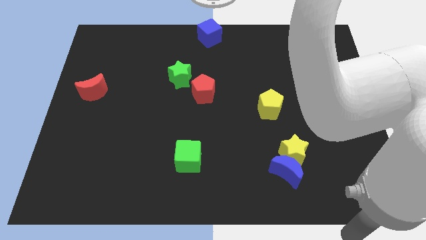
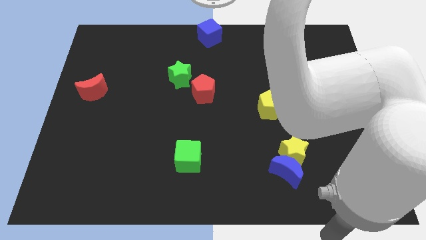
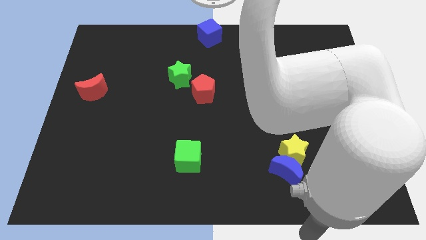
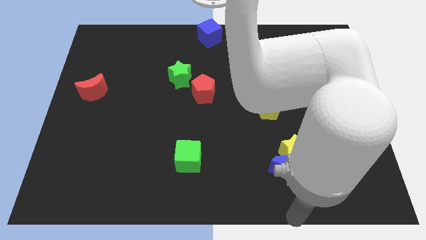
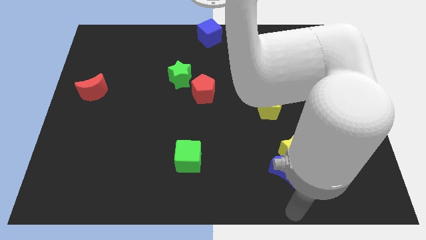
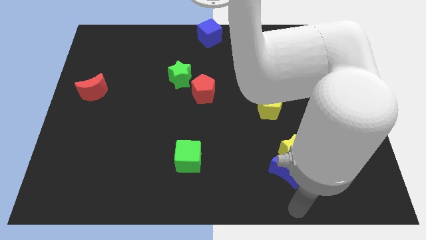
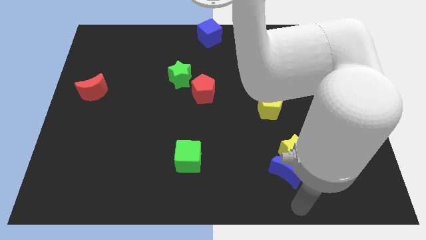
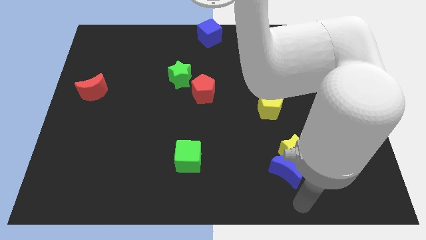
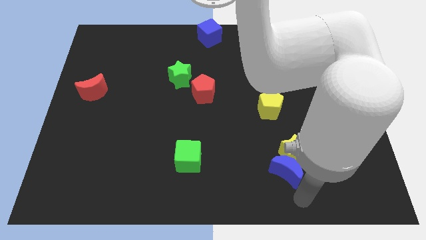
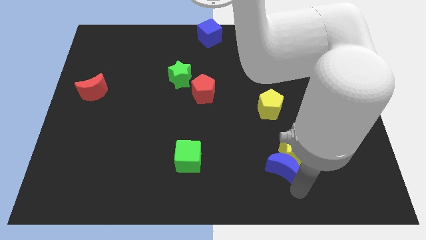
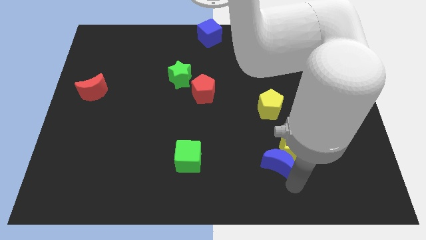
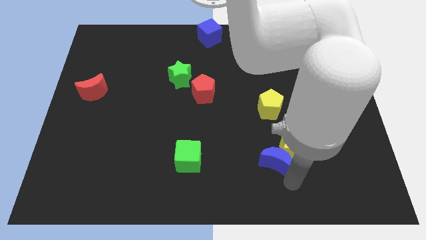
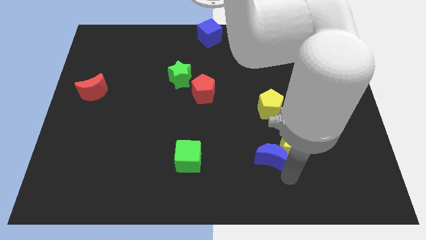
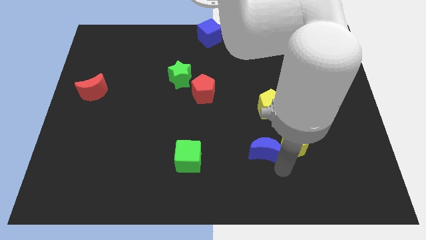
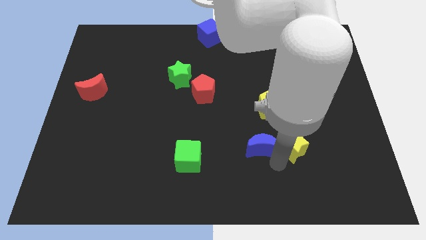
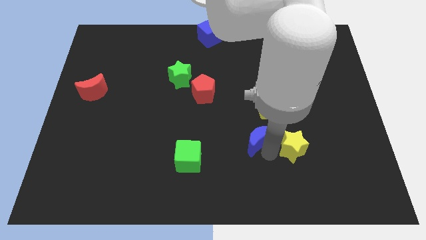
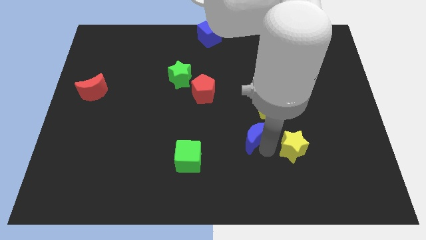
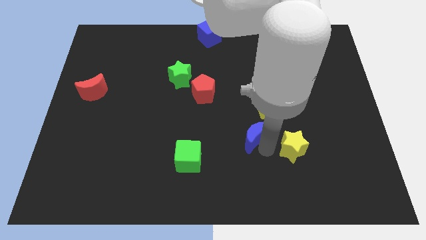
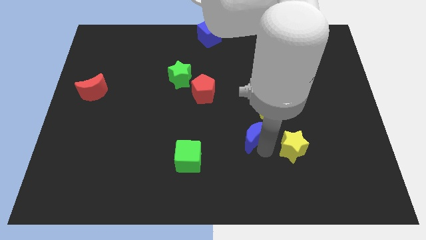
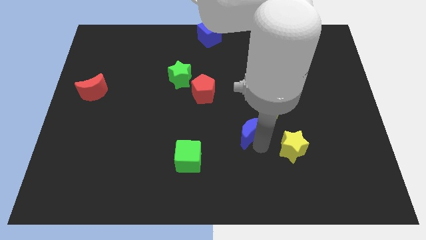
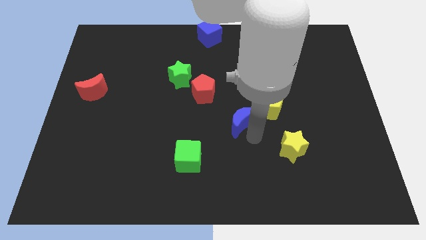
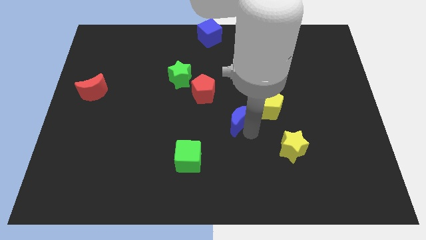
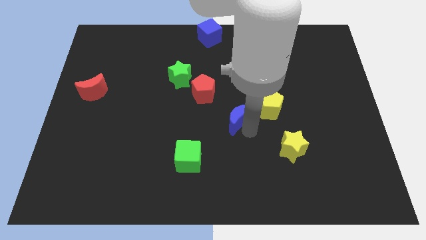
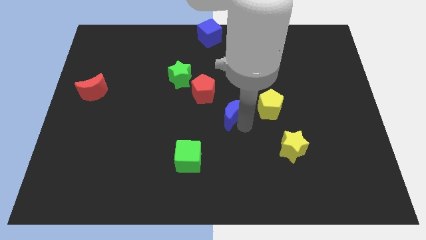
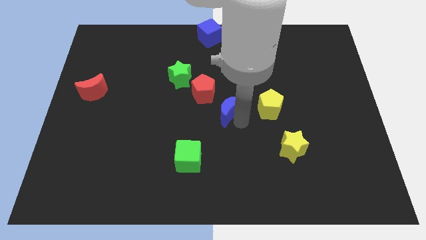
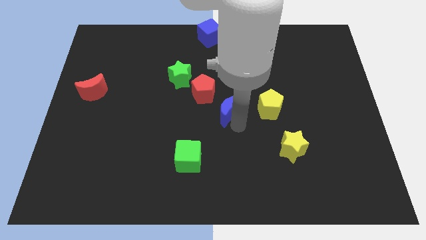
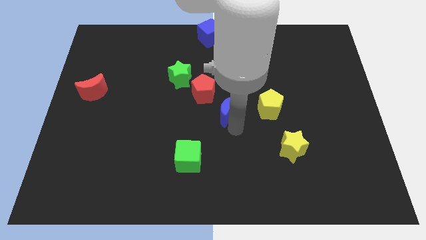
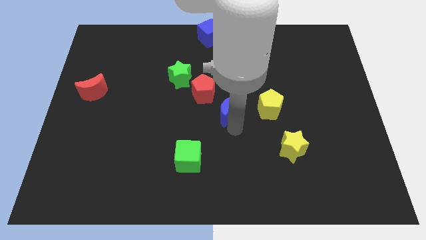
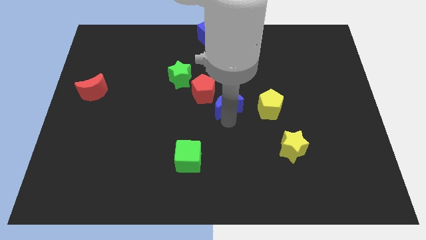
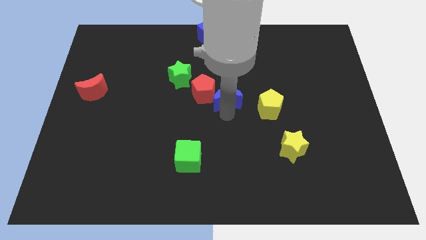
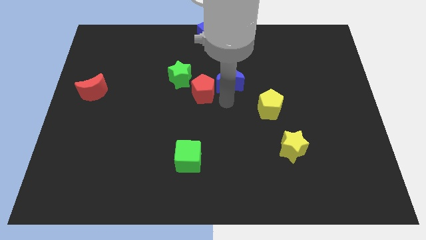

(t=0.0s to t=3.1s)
move the blue crescent to the right of the red pentagon

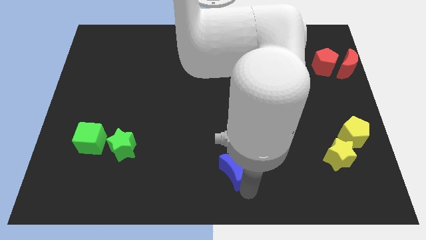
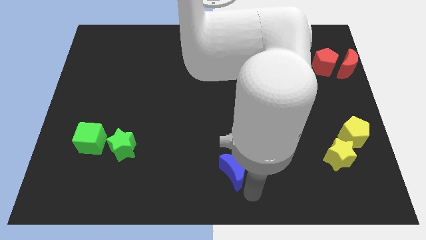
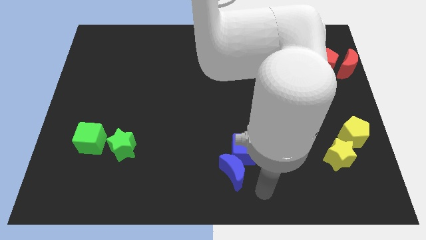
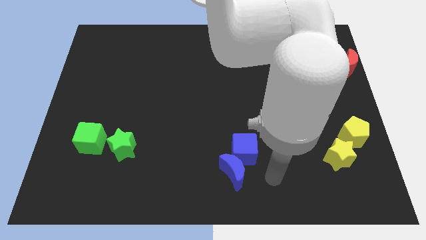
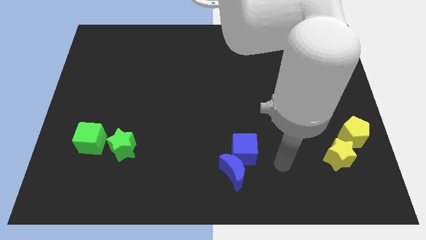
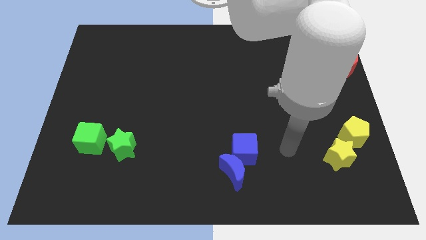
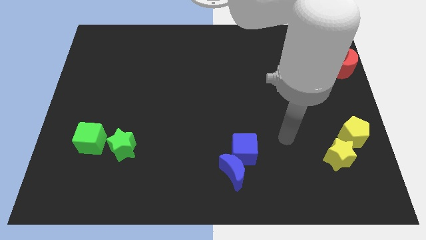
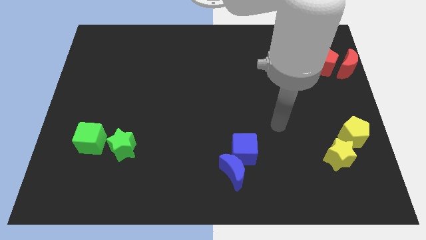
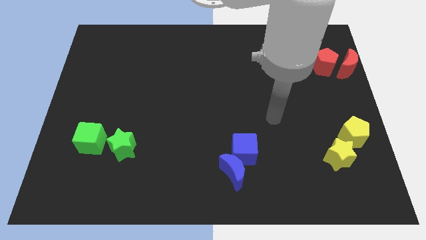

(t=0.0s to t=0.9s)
move the arm away from the blue moon

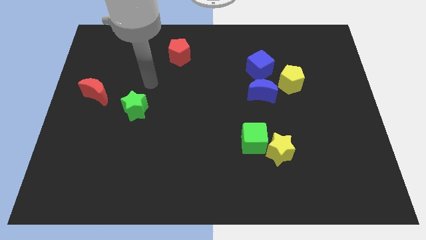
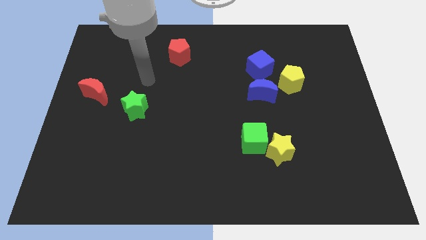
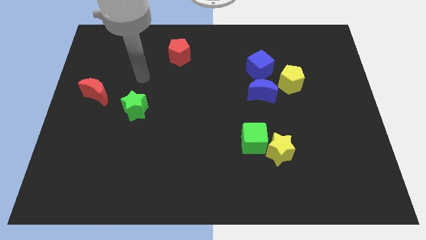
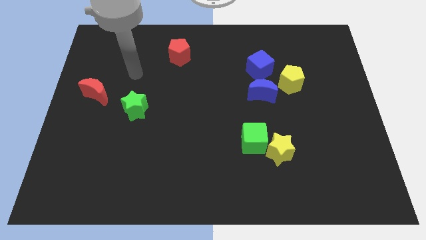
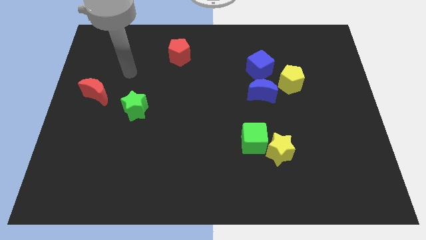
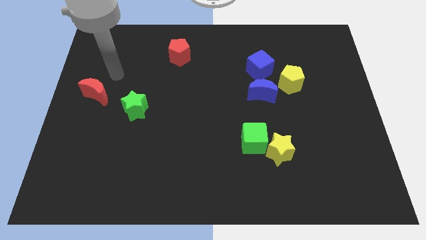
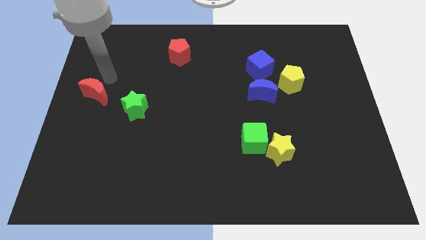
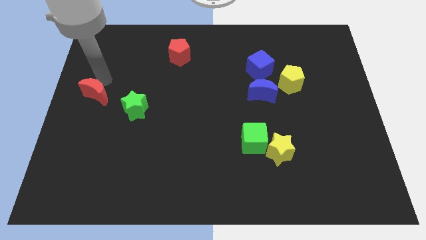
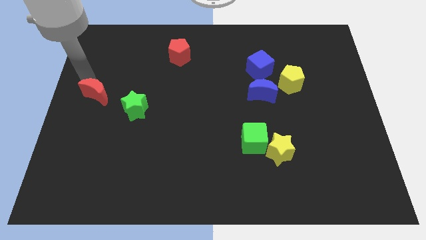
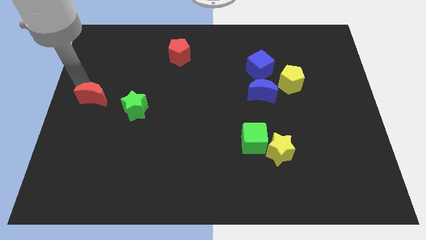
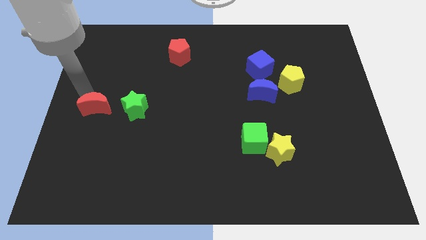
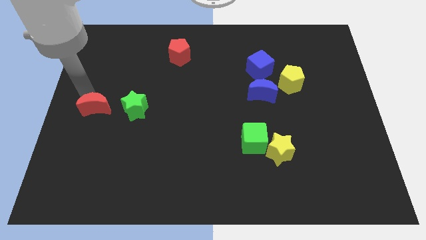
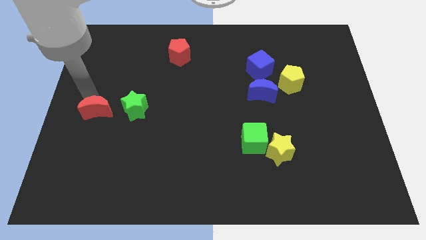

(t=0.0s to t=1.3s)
place the red crescent to the left of the green star

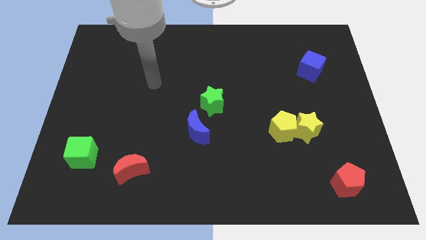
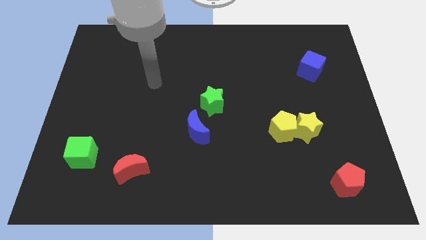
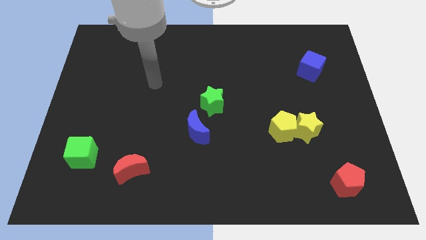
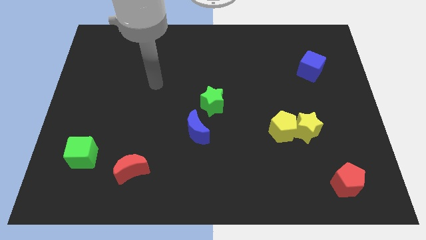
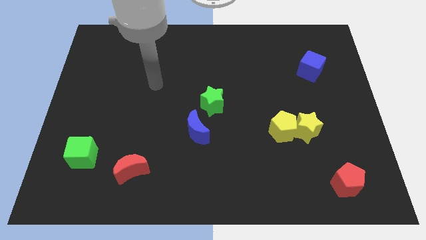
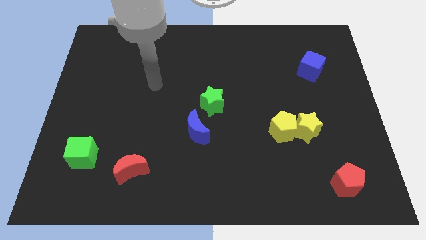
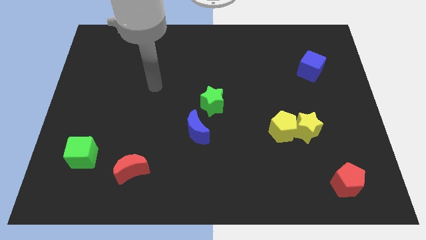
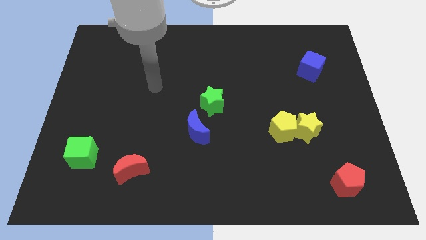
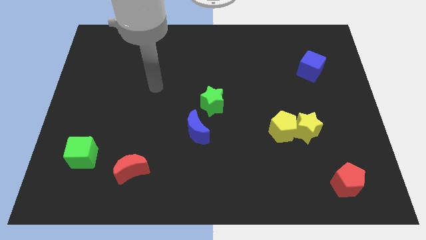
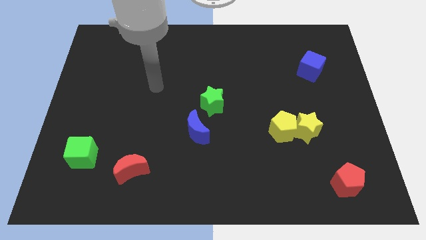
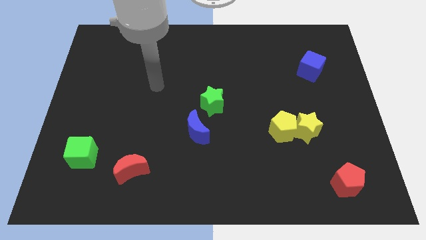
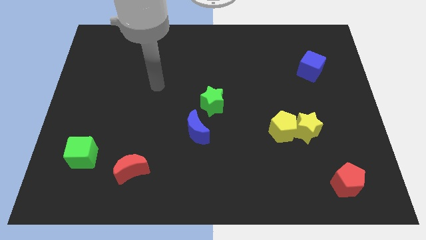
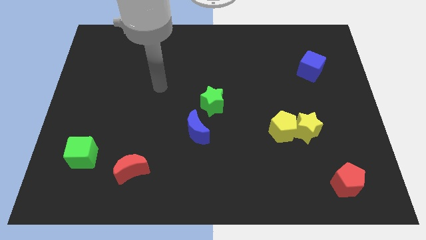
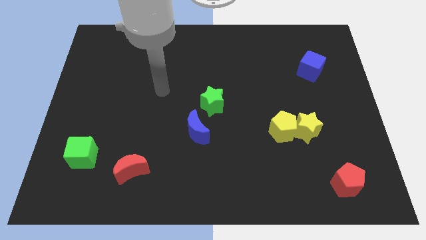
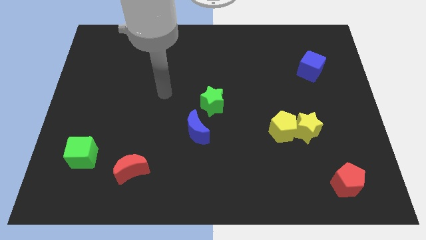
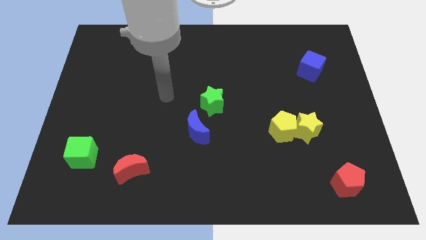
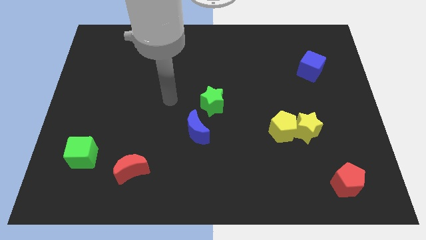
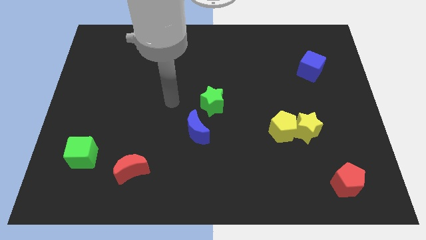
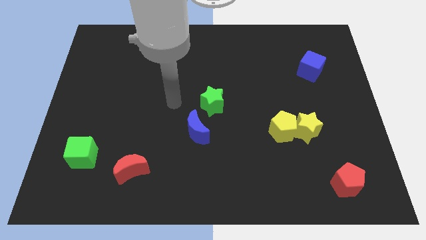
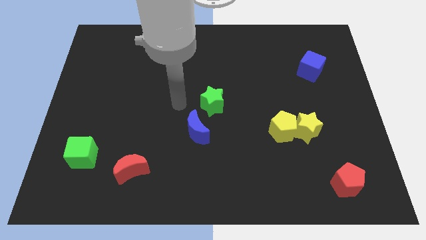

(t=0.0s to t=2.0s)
move your arm diagonal to the blue moon

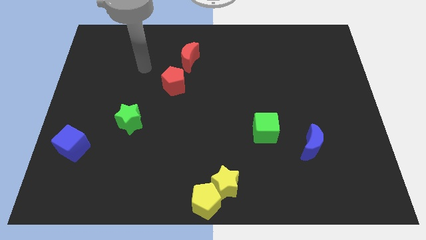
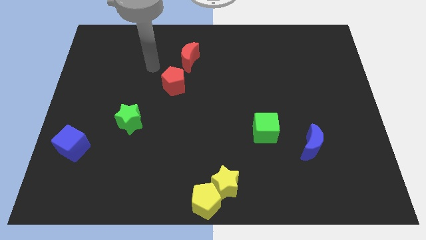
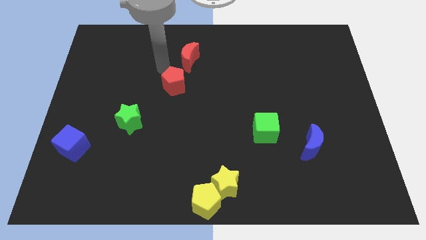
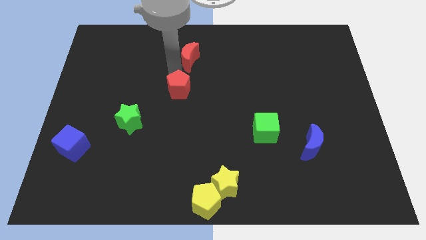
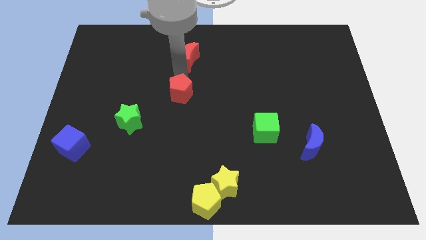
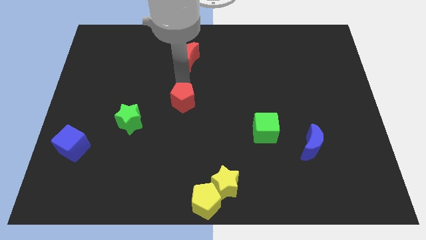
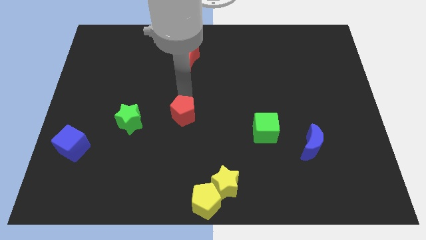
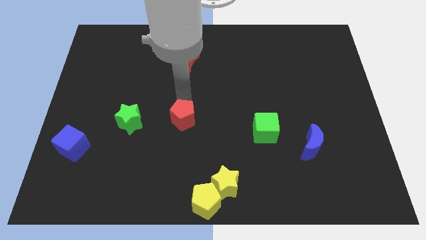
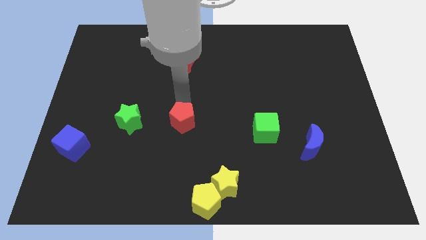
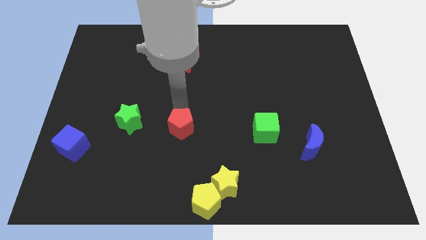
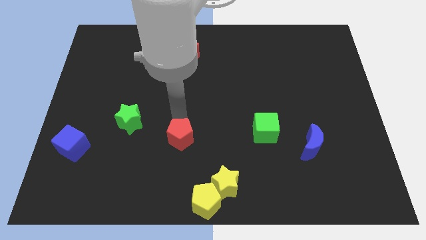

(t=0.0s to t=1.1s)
move red pentagon from red crescent

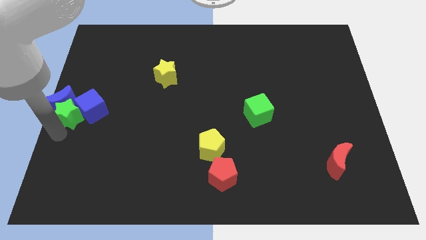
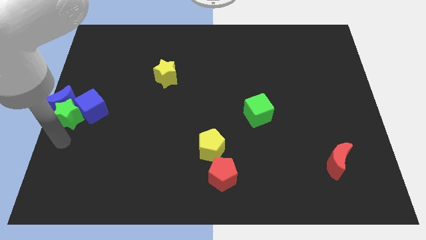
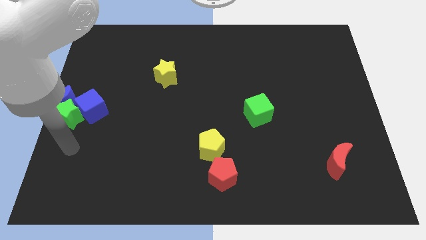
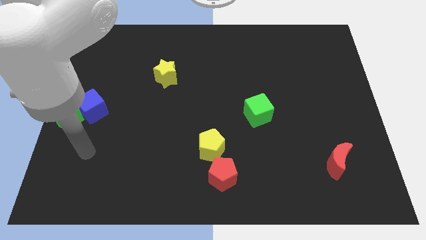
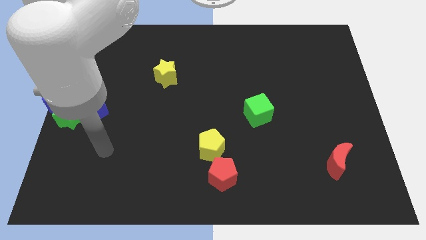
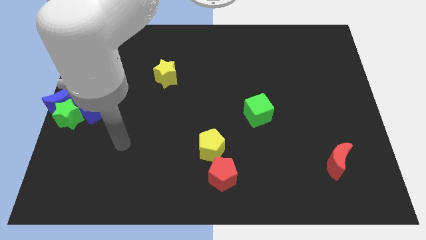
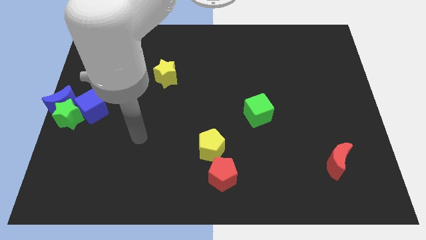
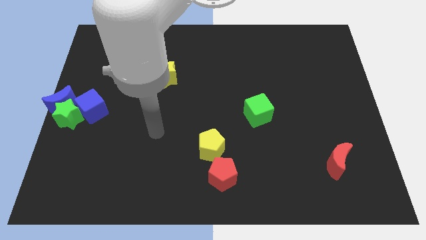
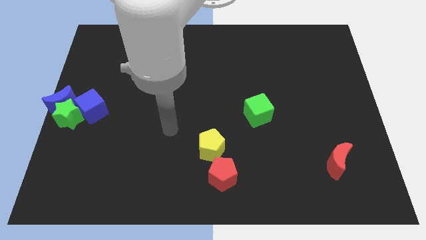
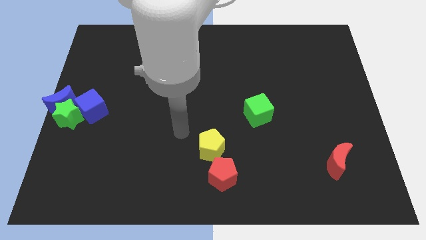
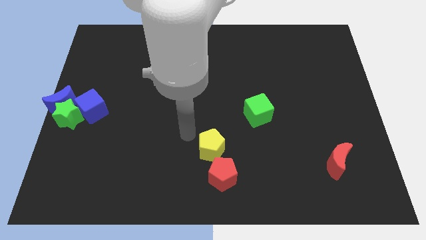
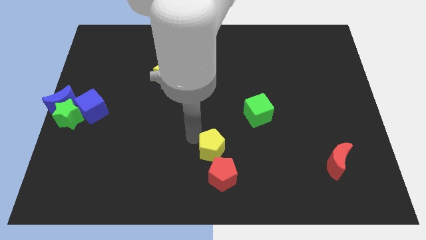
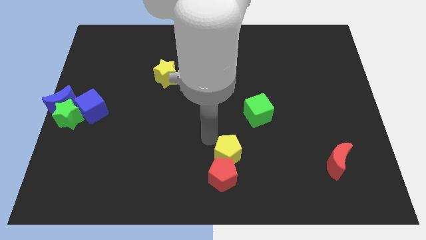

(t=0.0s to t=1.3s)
move the yellow pentagon slightly to the right
